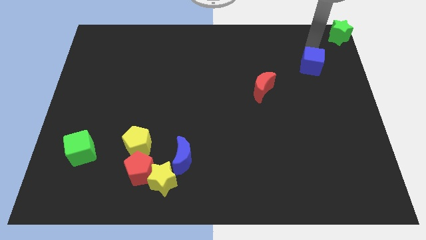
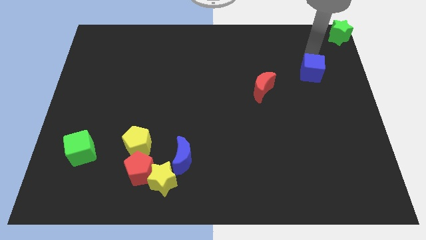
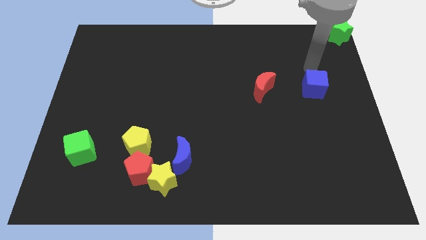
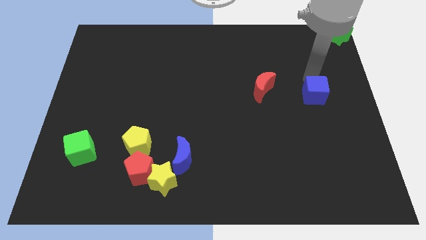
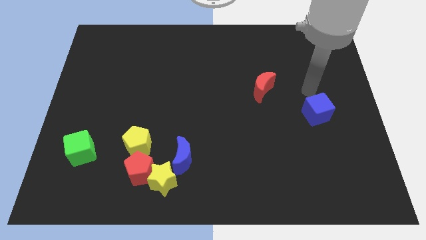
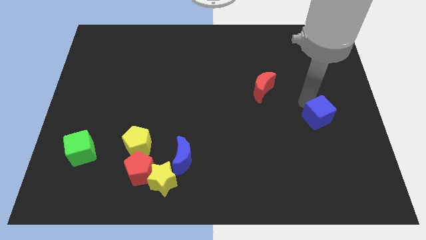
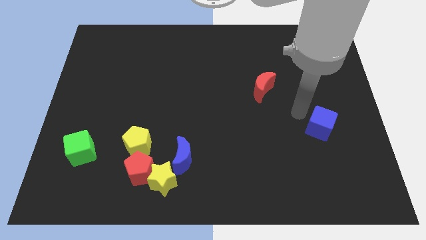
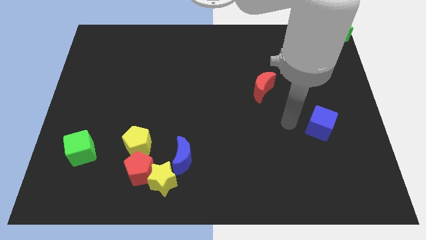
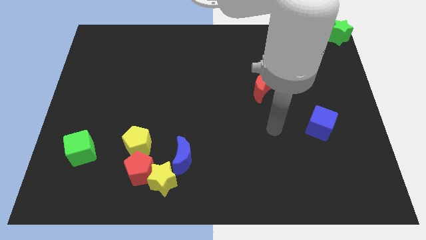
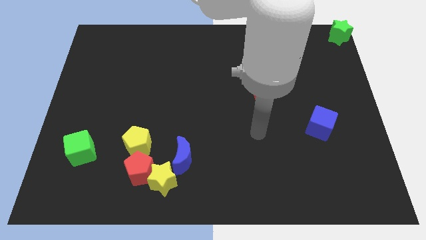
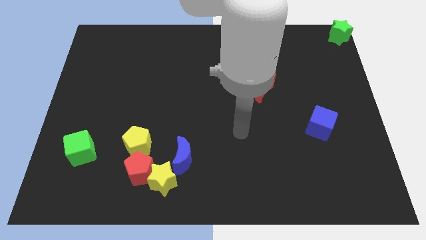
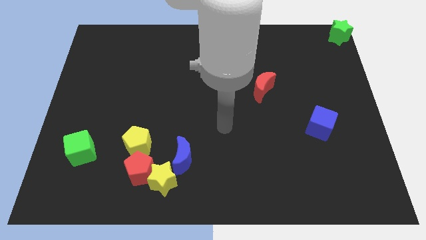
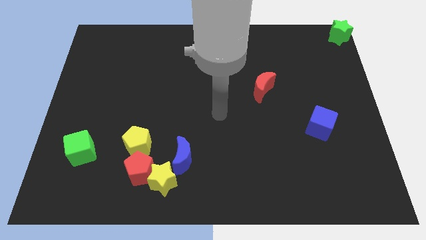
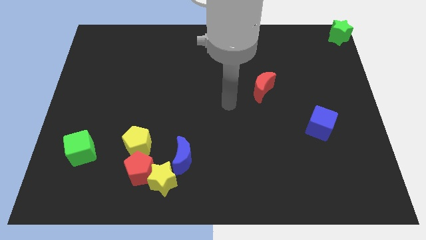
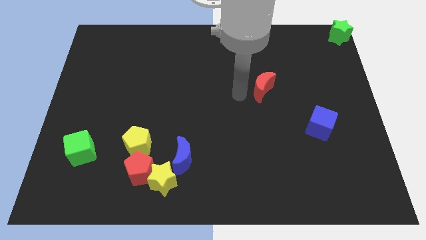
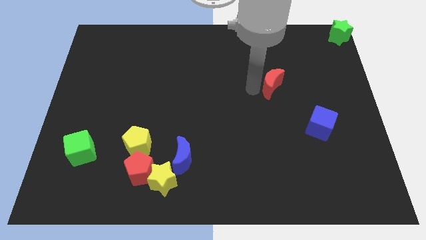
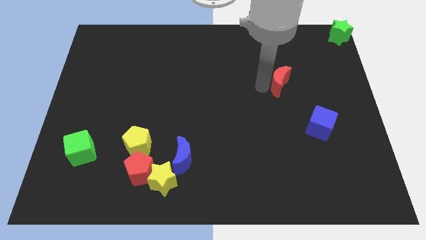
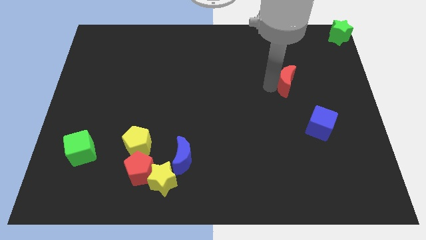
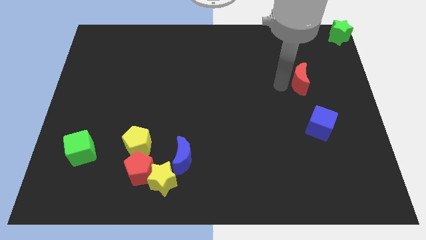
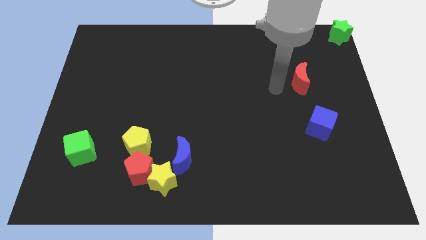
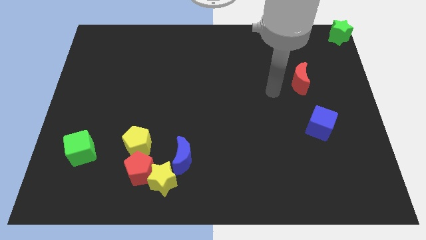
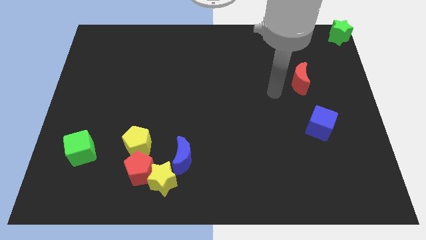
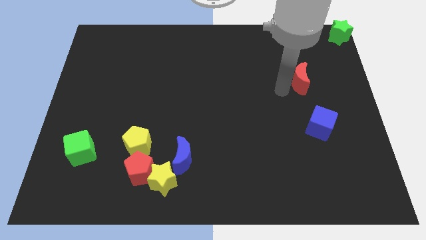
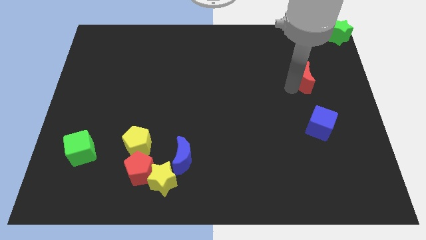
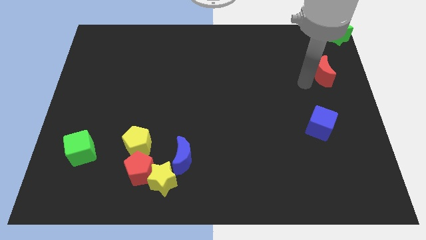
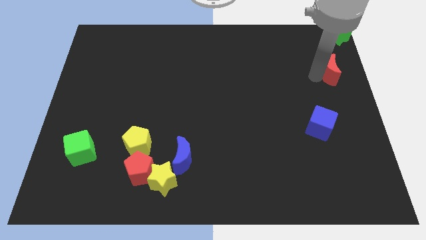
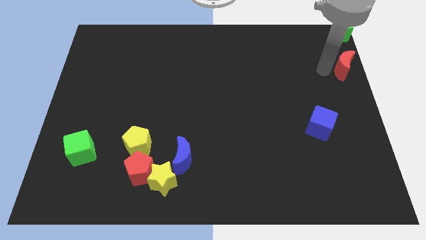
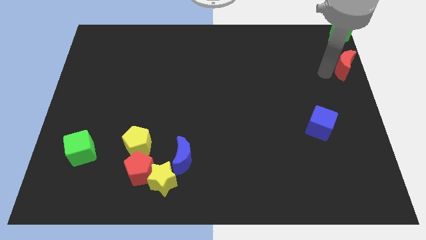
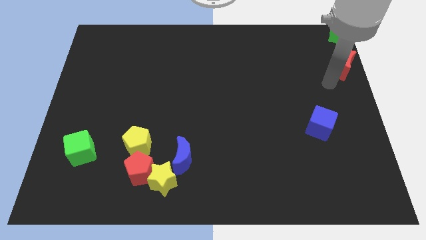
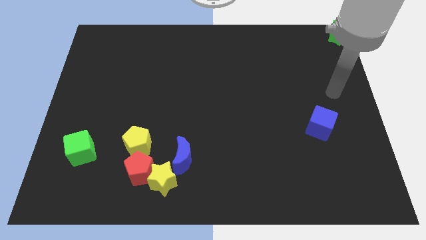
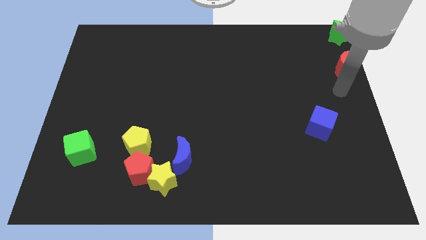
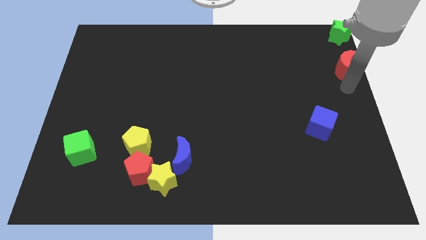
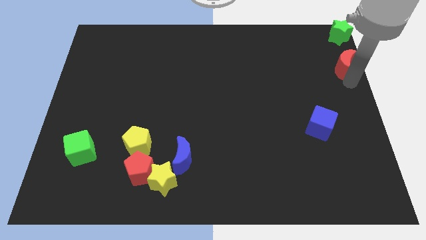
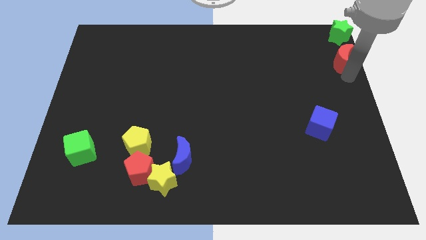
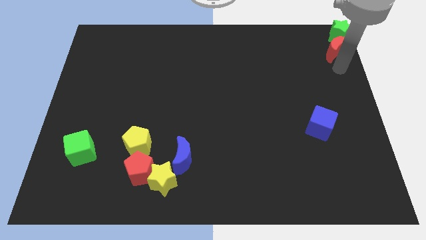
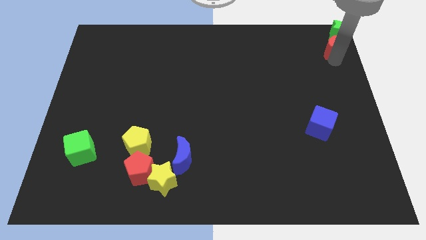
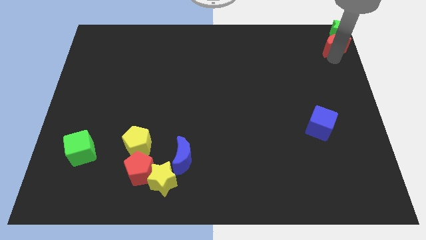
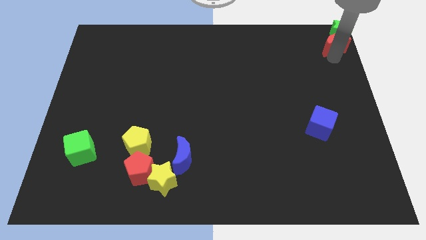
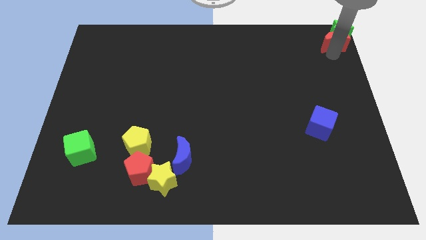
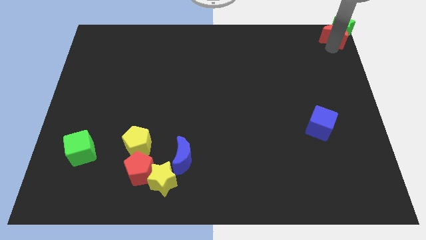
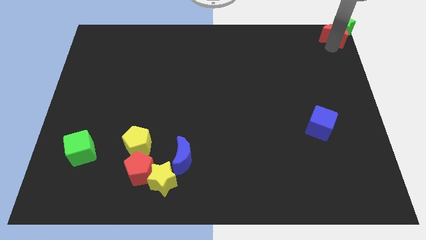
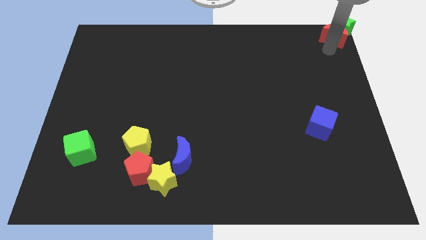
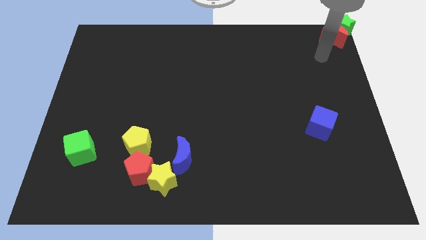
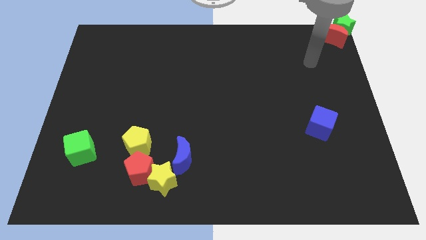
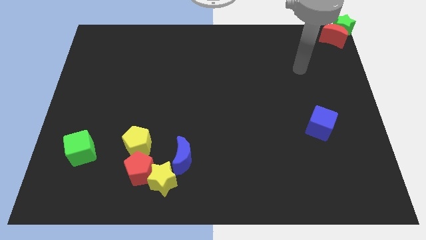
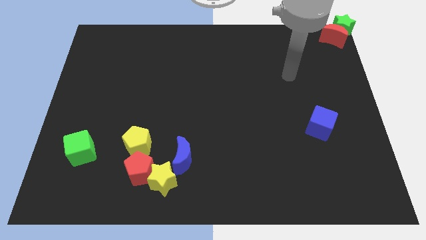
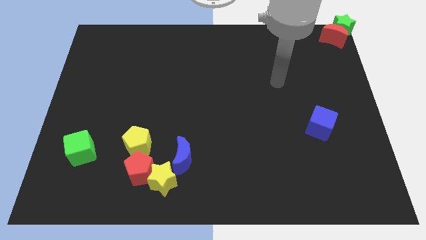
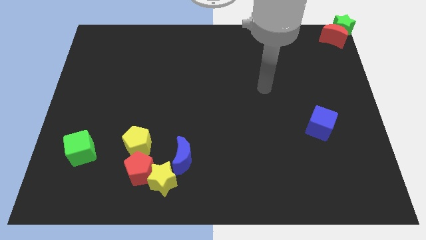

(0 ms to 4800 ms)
push the red crescent to top right corner

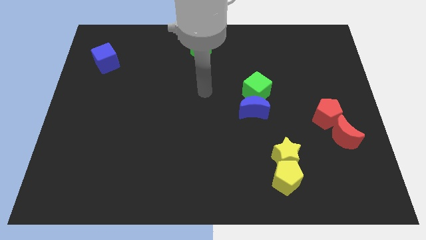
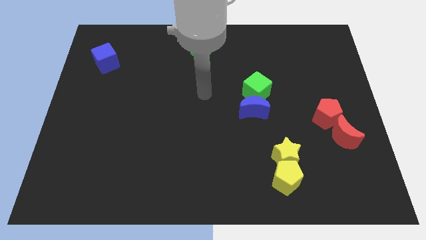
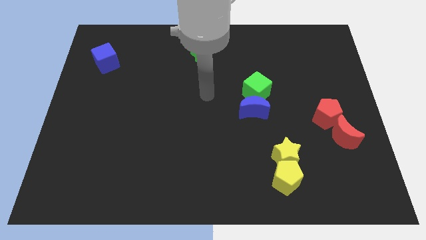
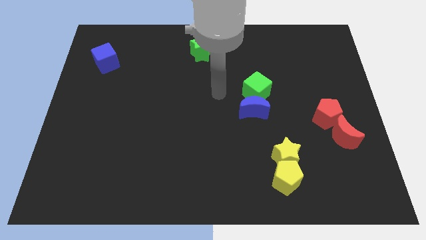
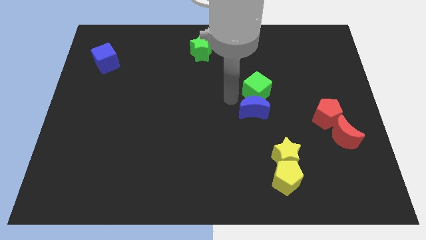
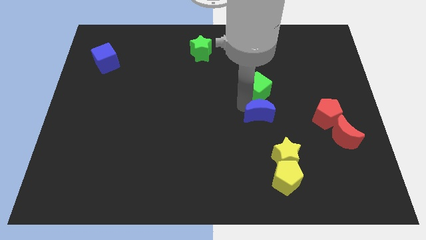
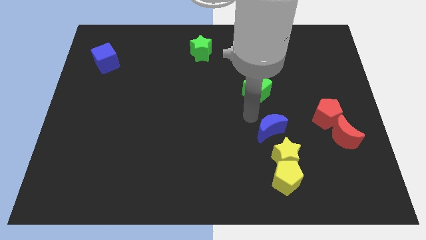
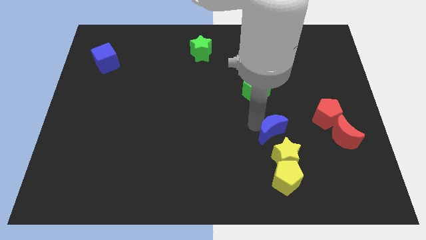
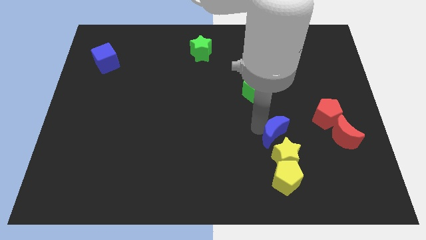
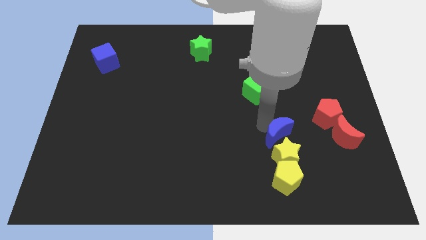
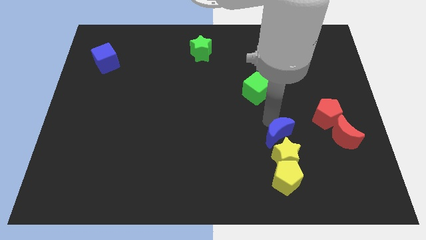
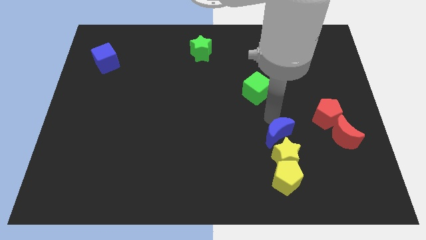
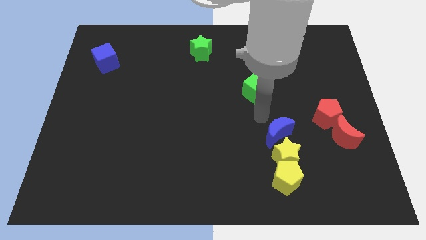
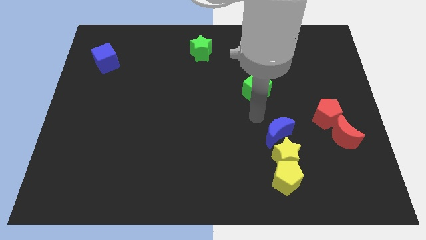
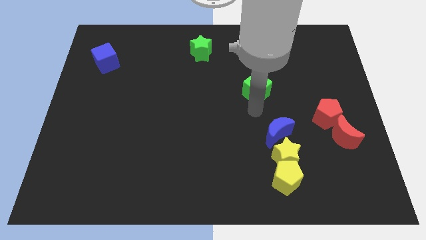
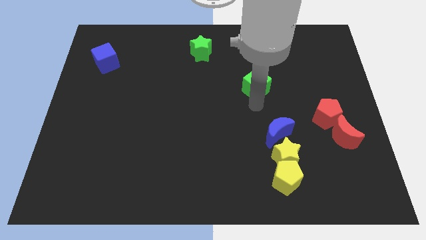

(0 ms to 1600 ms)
move blue moon away from the green cube

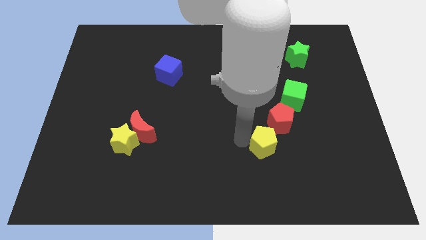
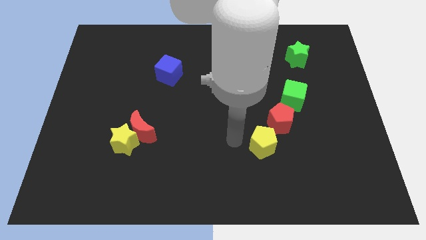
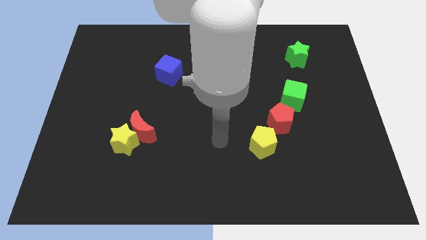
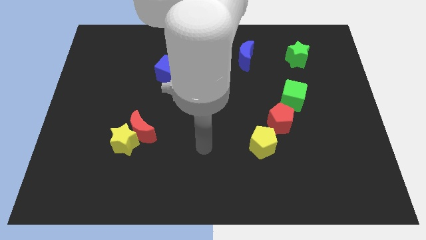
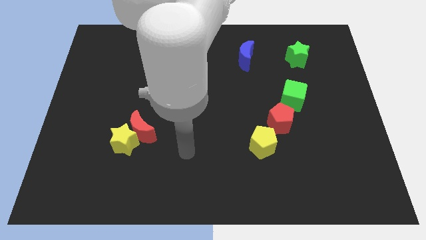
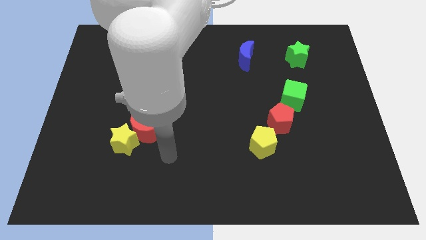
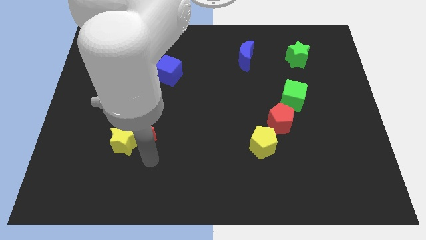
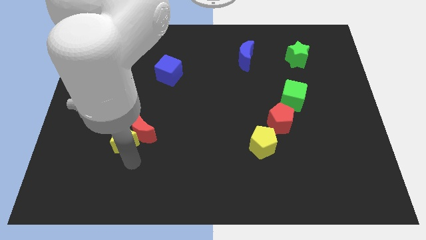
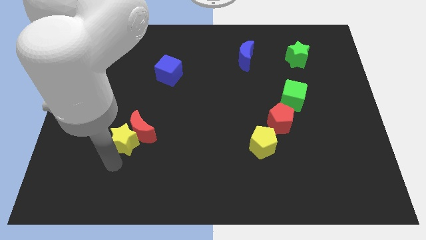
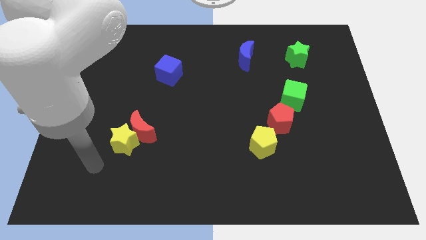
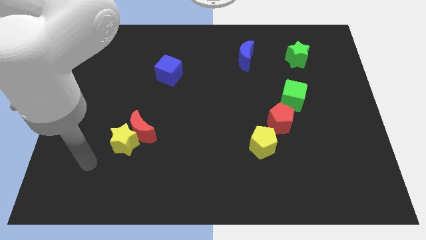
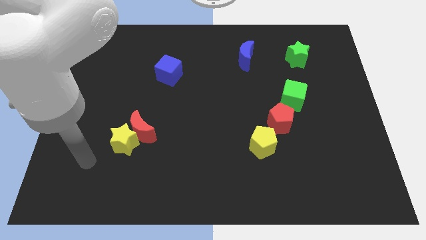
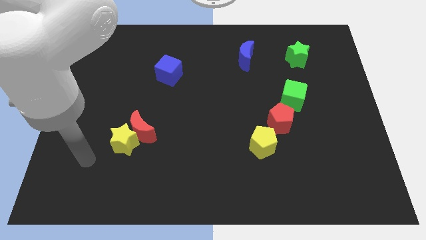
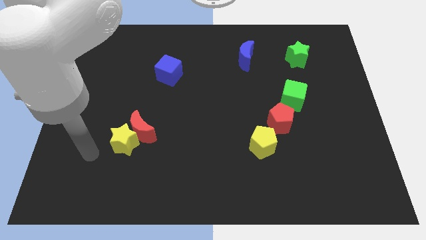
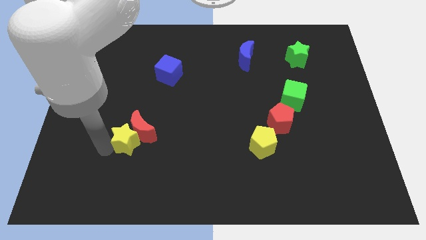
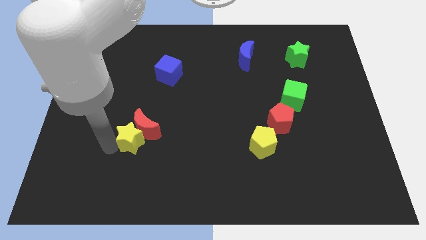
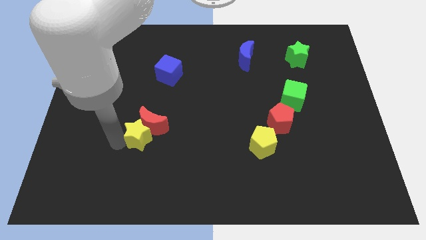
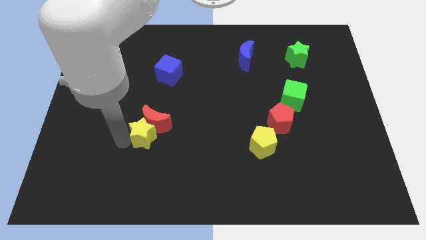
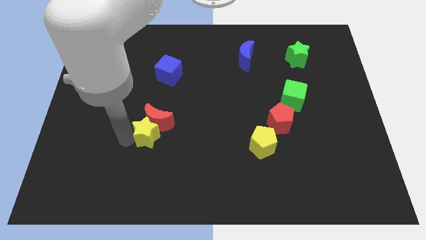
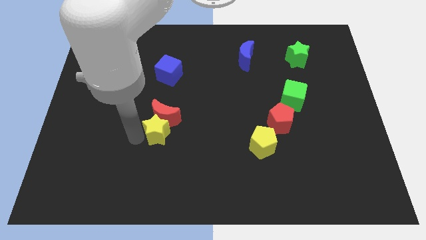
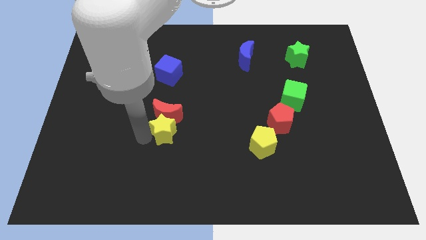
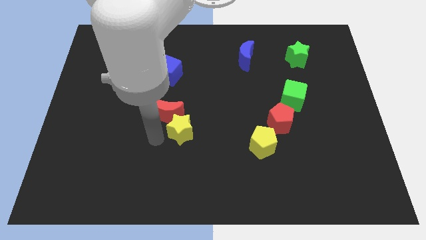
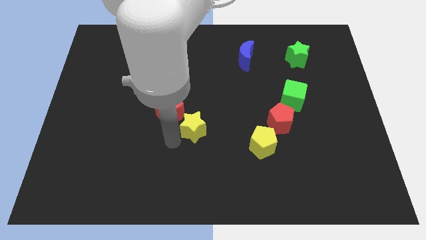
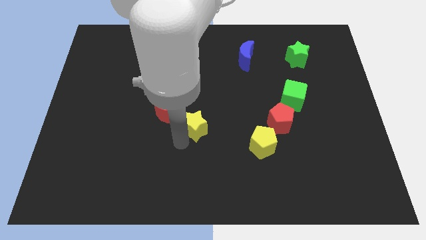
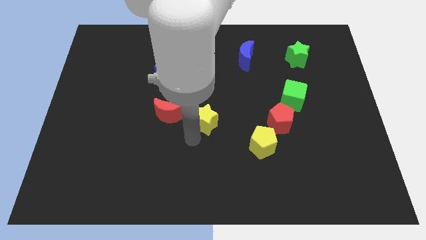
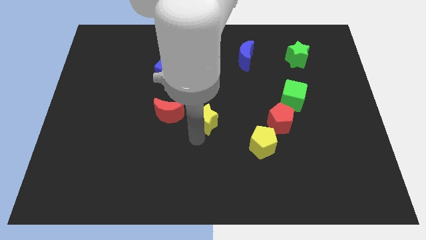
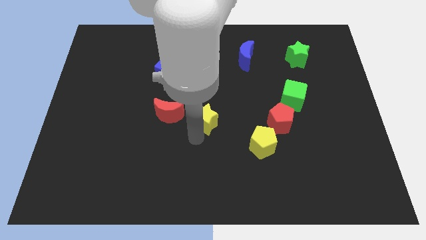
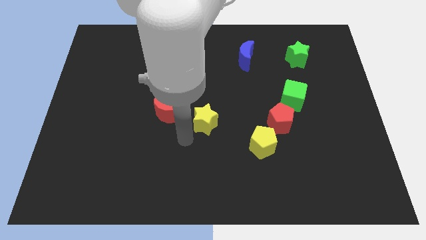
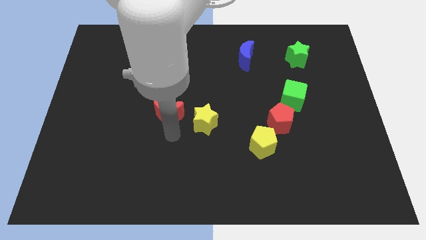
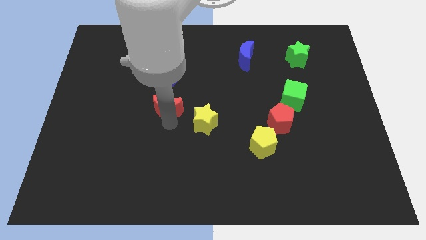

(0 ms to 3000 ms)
place the yellow star diagonally in between the red moon and yellow pentagon
